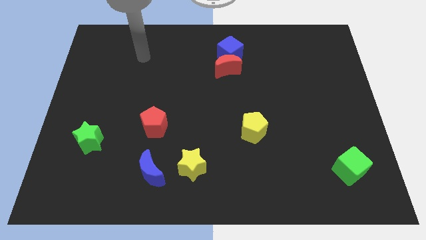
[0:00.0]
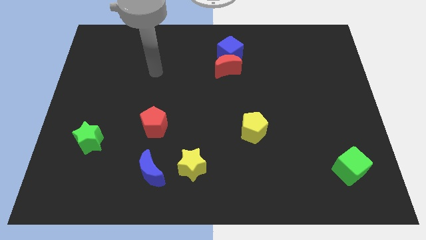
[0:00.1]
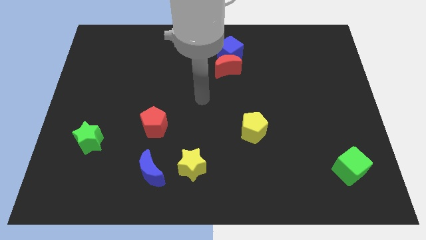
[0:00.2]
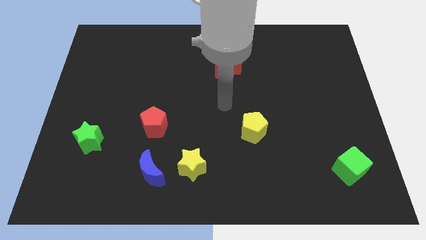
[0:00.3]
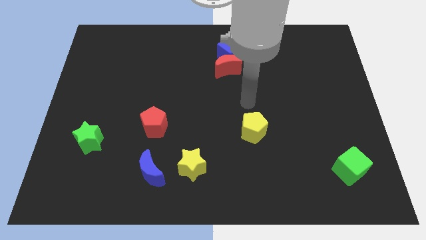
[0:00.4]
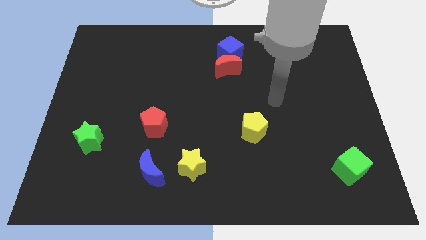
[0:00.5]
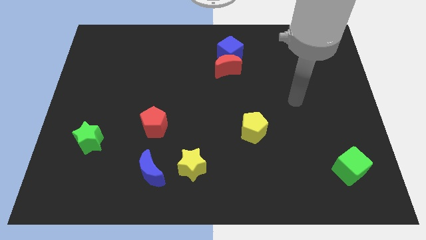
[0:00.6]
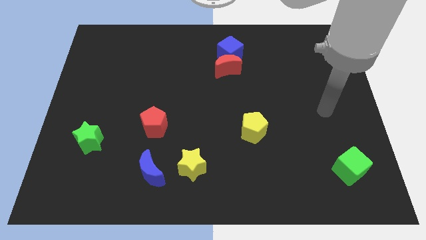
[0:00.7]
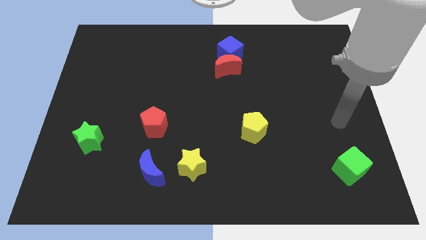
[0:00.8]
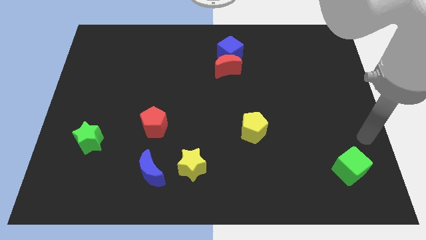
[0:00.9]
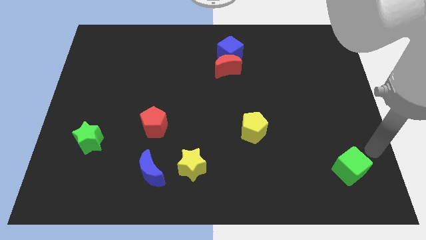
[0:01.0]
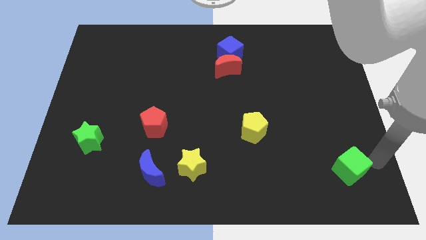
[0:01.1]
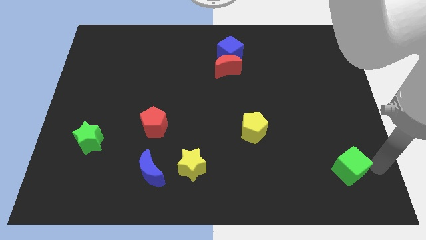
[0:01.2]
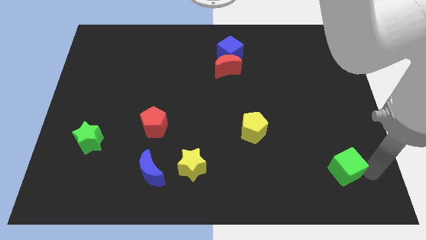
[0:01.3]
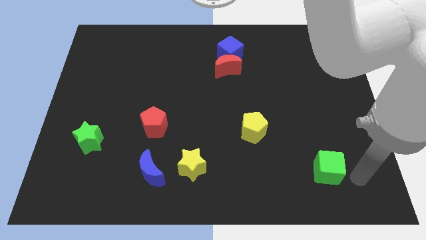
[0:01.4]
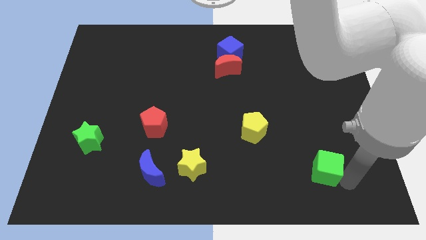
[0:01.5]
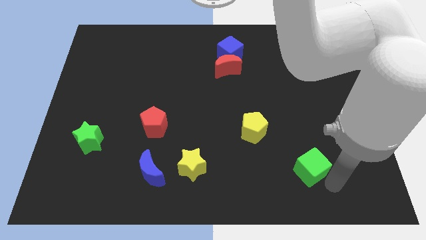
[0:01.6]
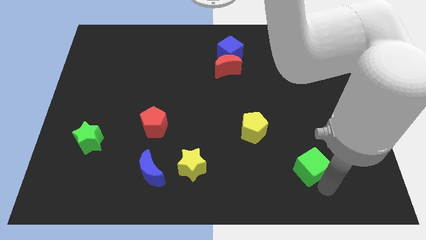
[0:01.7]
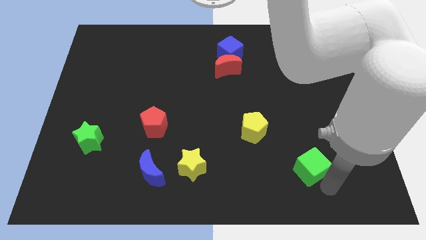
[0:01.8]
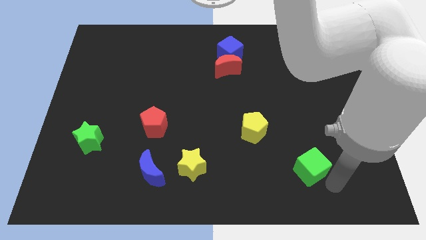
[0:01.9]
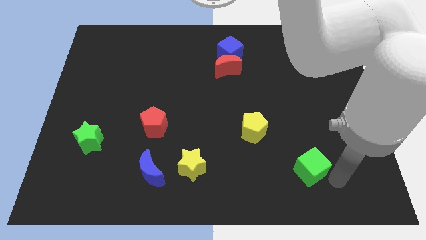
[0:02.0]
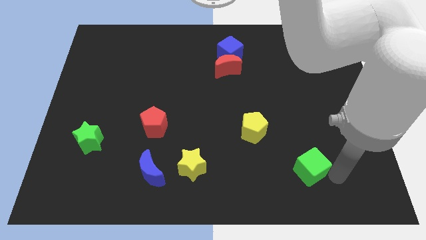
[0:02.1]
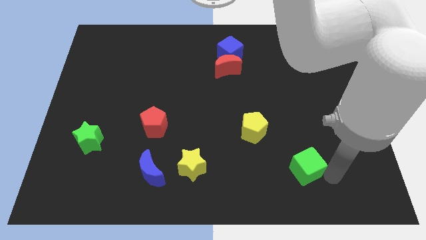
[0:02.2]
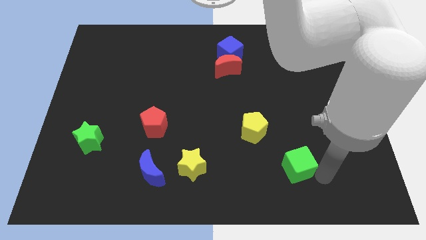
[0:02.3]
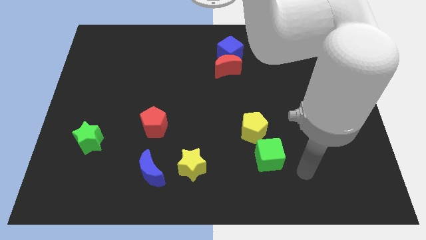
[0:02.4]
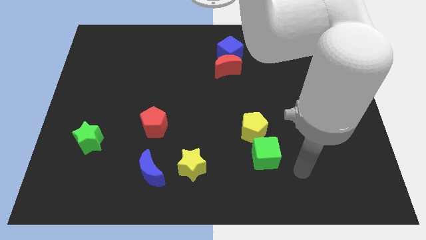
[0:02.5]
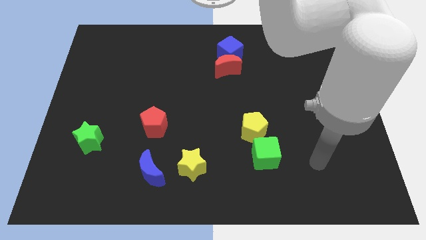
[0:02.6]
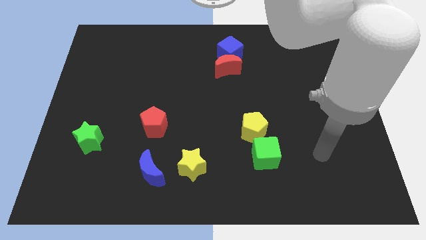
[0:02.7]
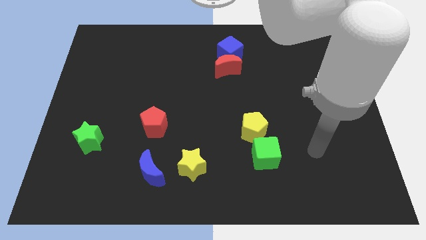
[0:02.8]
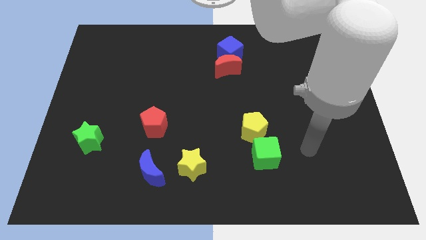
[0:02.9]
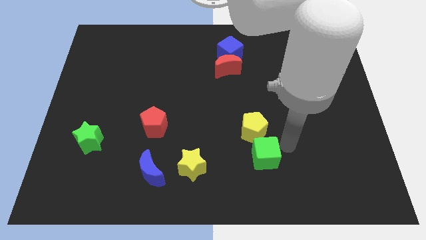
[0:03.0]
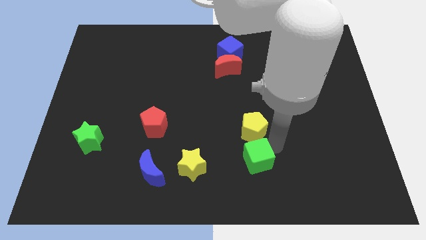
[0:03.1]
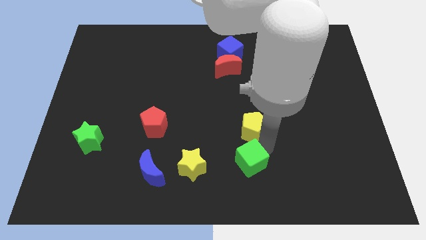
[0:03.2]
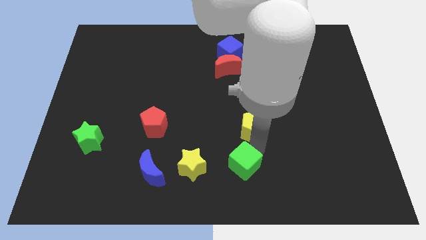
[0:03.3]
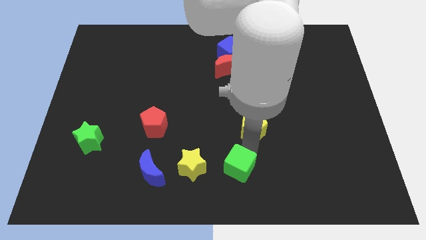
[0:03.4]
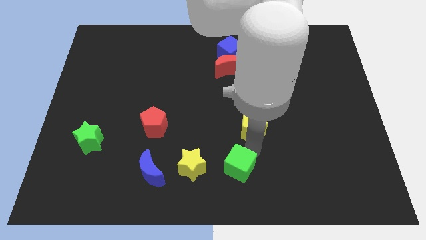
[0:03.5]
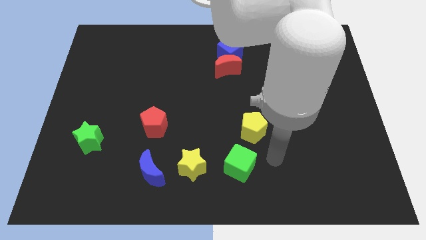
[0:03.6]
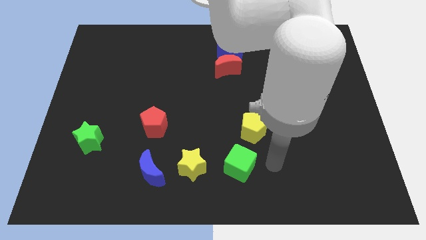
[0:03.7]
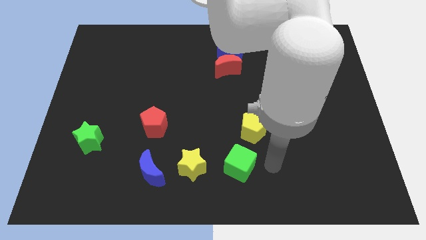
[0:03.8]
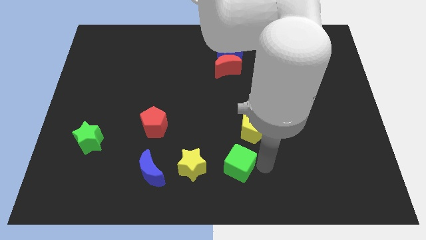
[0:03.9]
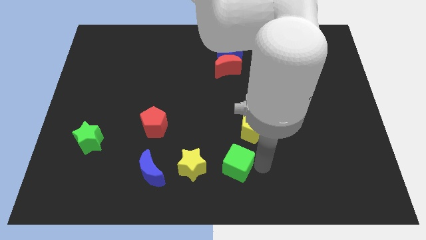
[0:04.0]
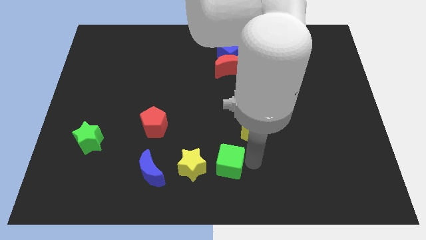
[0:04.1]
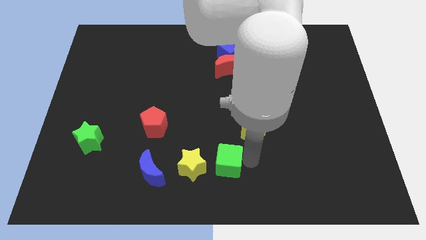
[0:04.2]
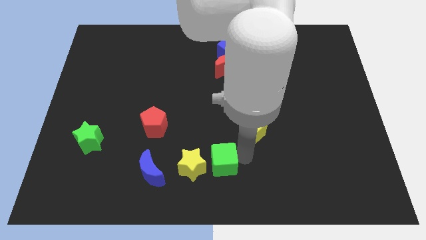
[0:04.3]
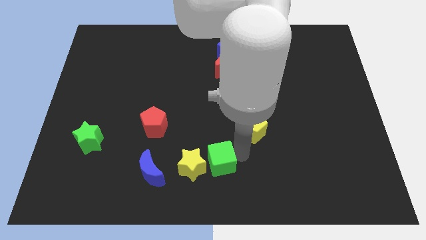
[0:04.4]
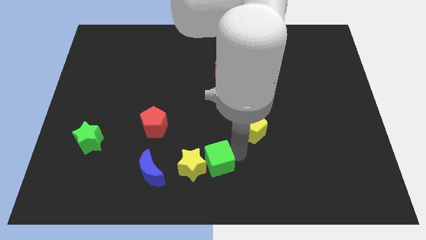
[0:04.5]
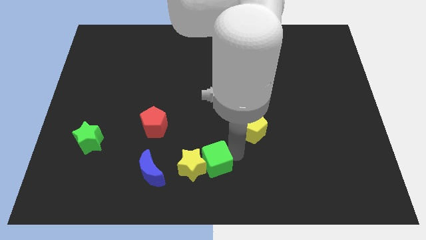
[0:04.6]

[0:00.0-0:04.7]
slide the green cube next to the yellow star

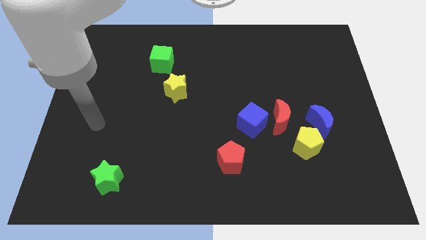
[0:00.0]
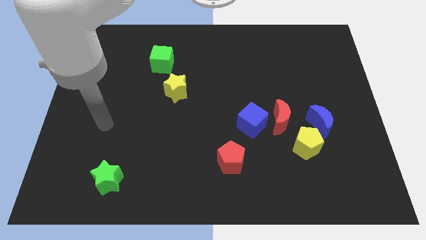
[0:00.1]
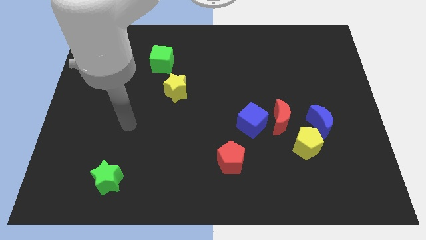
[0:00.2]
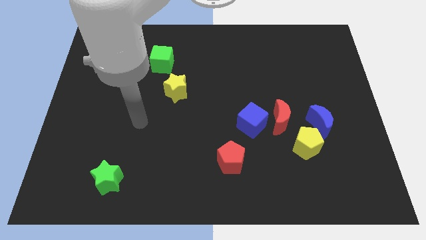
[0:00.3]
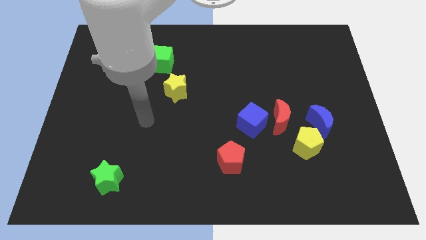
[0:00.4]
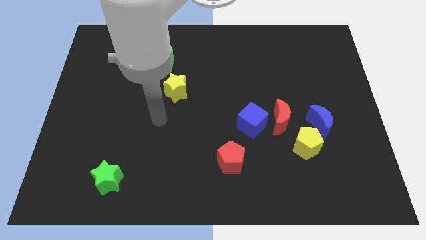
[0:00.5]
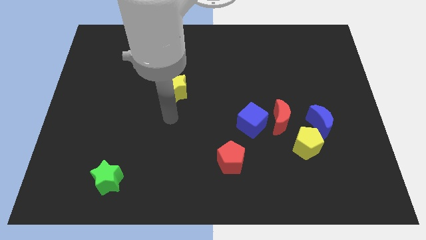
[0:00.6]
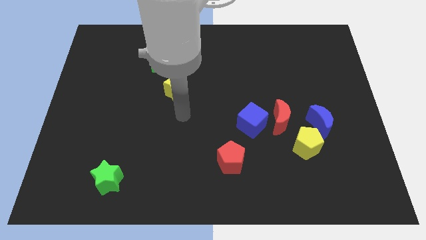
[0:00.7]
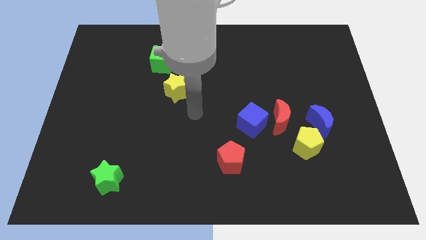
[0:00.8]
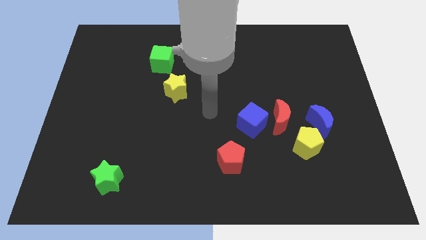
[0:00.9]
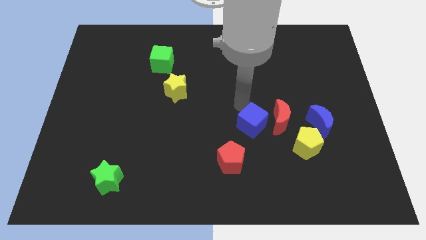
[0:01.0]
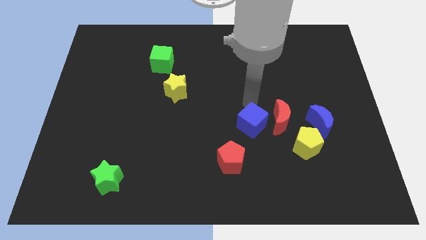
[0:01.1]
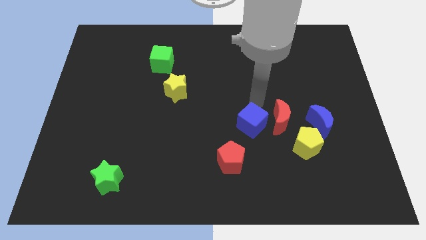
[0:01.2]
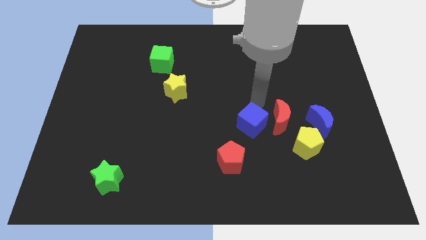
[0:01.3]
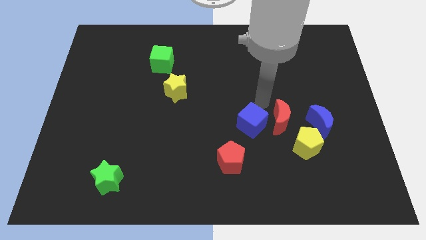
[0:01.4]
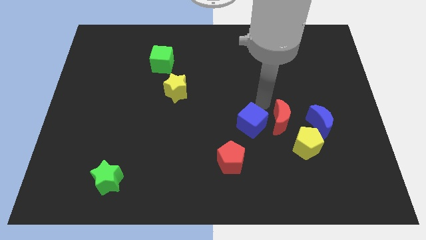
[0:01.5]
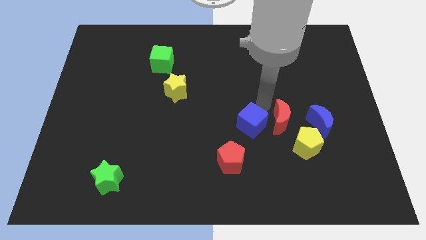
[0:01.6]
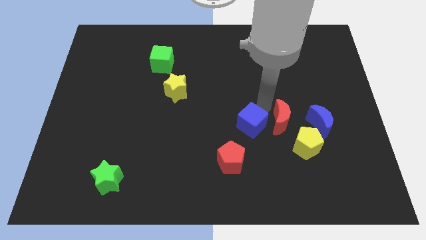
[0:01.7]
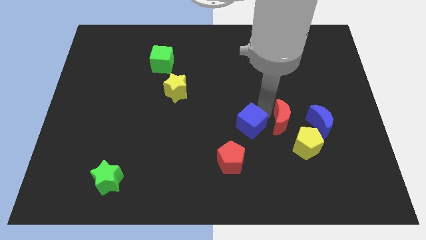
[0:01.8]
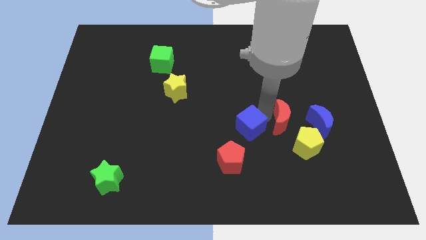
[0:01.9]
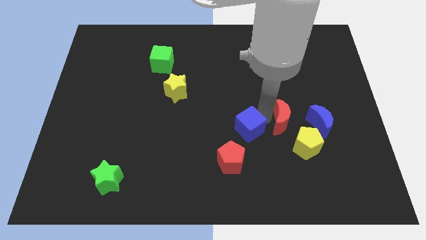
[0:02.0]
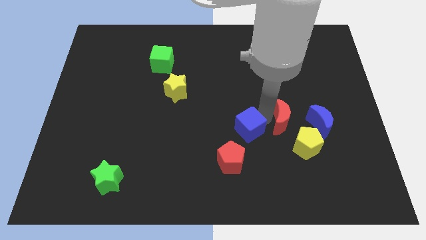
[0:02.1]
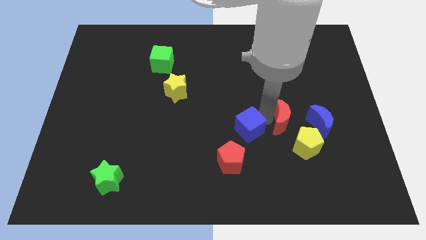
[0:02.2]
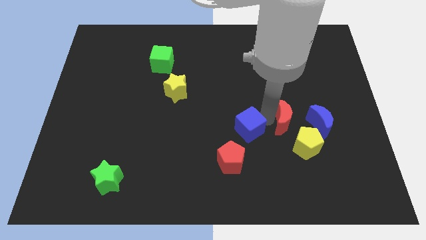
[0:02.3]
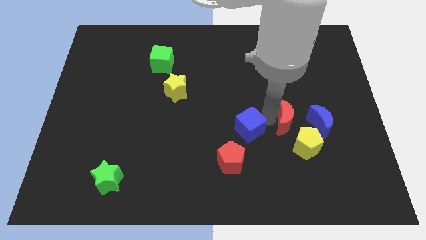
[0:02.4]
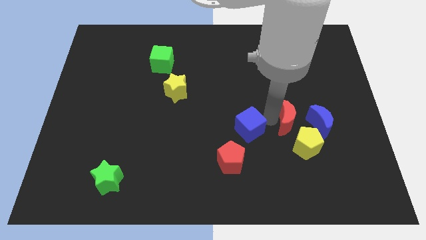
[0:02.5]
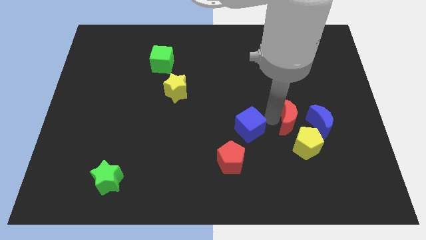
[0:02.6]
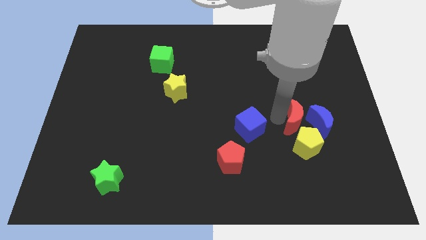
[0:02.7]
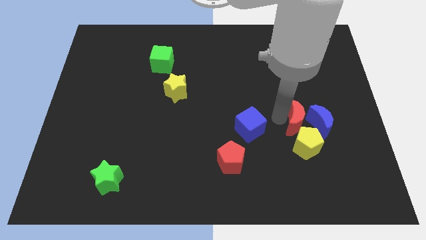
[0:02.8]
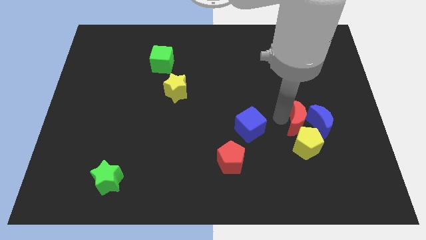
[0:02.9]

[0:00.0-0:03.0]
slide the red moon towards the blue moon

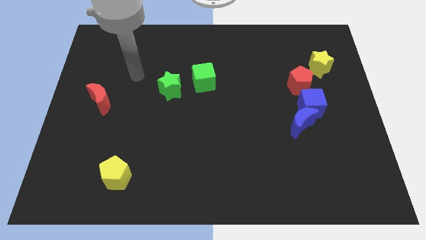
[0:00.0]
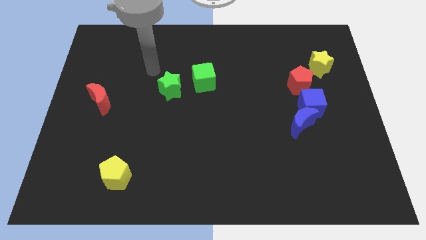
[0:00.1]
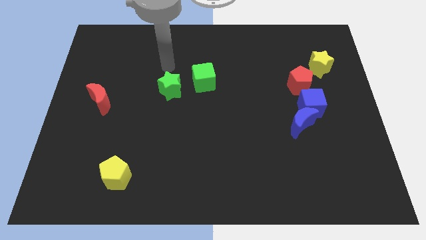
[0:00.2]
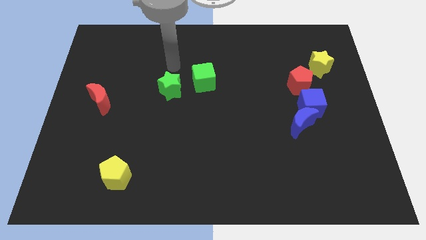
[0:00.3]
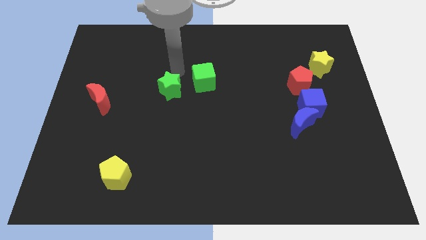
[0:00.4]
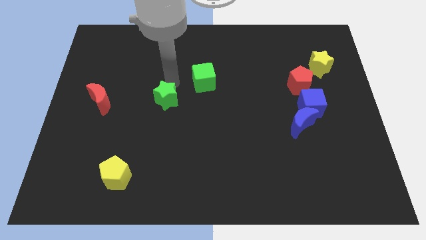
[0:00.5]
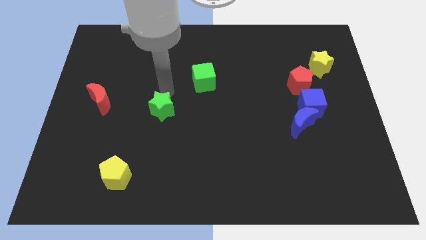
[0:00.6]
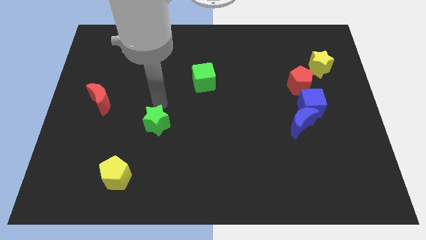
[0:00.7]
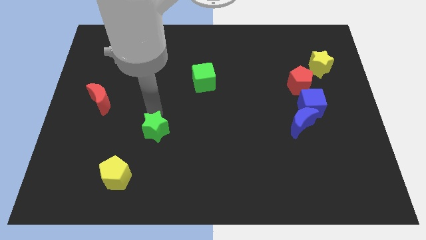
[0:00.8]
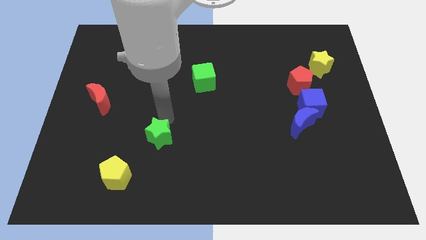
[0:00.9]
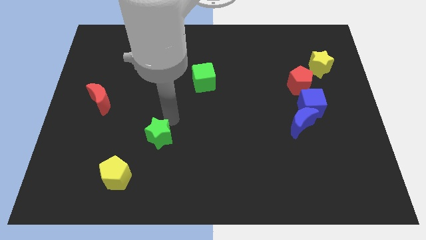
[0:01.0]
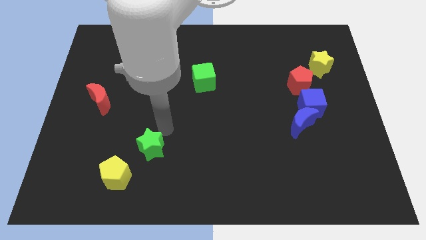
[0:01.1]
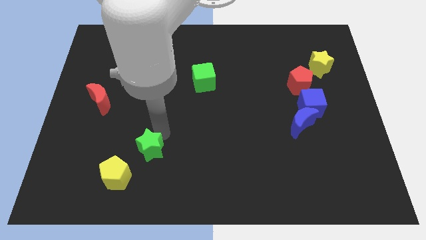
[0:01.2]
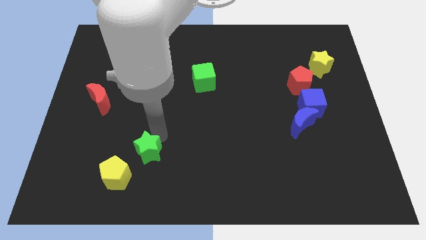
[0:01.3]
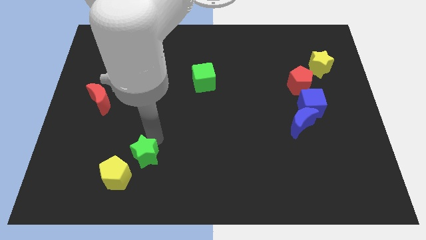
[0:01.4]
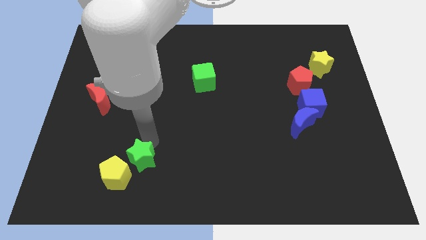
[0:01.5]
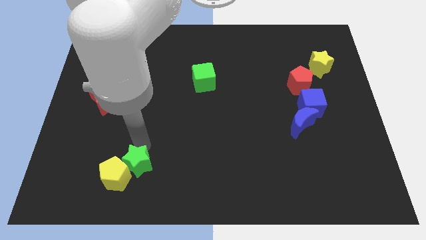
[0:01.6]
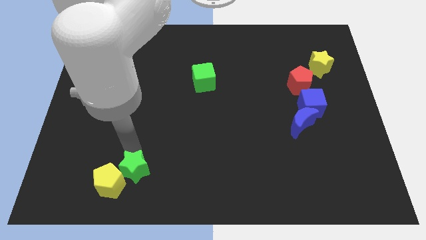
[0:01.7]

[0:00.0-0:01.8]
put the green star to the yellow pentagon
